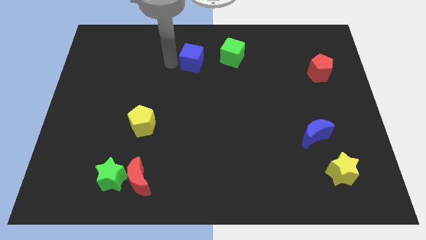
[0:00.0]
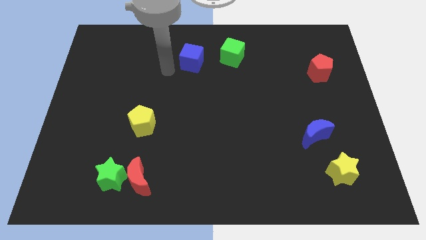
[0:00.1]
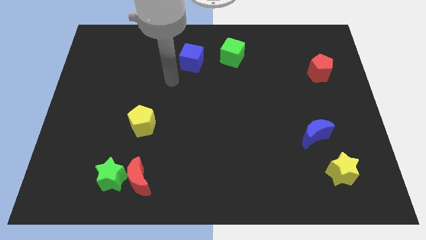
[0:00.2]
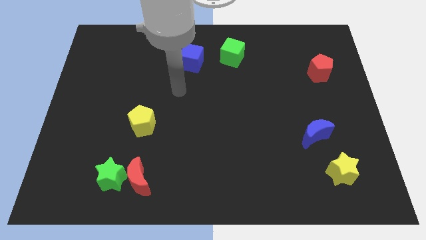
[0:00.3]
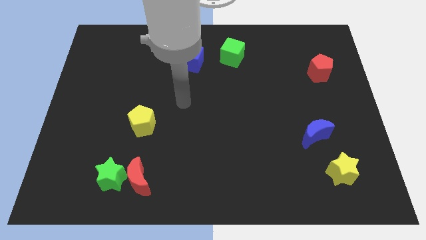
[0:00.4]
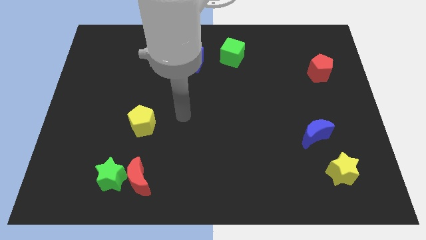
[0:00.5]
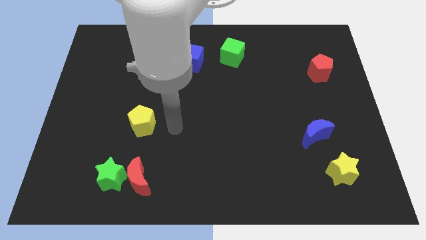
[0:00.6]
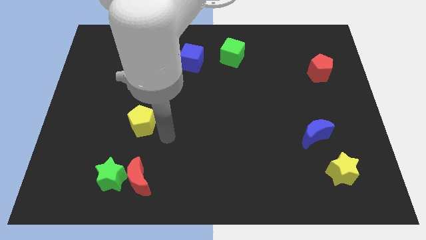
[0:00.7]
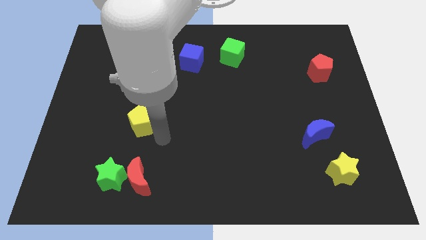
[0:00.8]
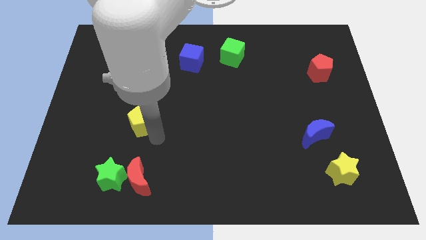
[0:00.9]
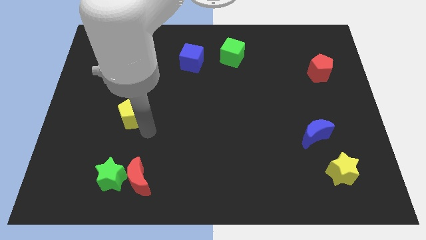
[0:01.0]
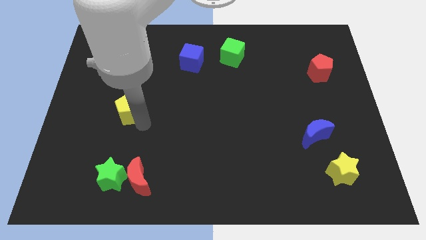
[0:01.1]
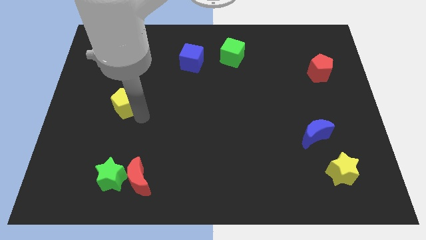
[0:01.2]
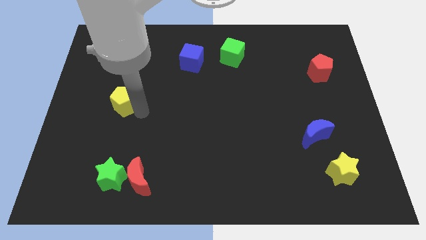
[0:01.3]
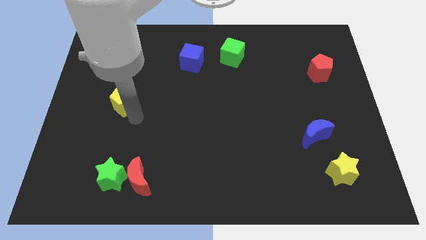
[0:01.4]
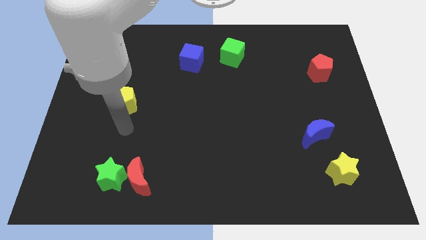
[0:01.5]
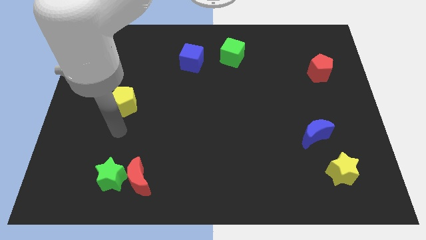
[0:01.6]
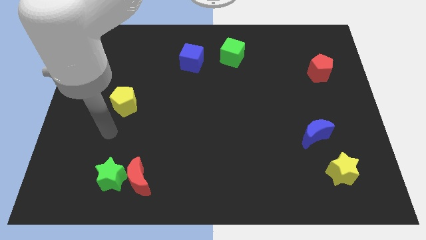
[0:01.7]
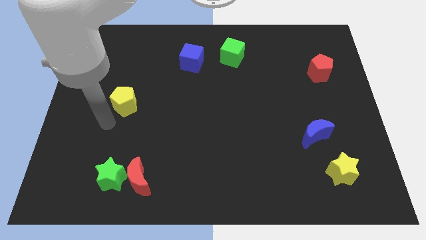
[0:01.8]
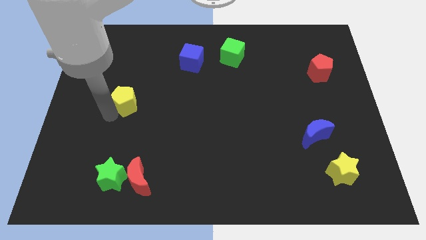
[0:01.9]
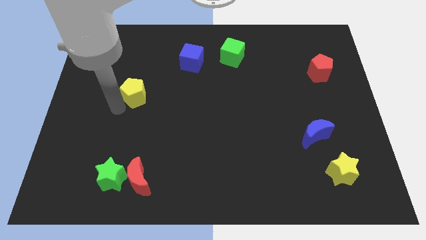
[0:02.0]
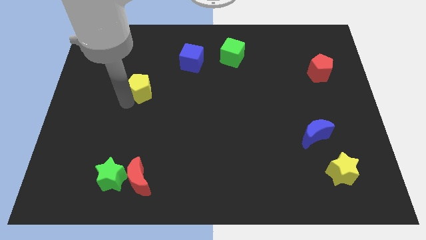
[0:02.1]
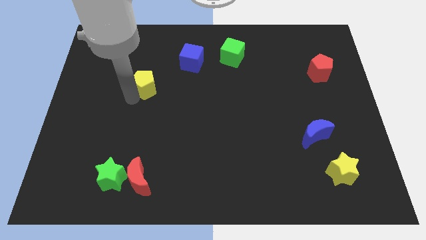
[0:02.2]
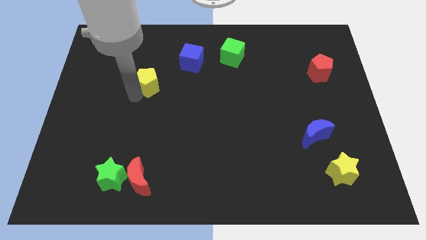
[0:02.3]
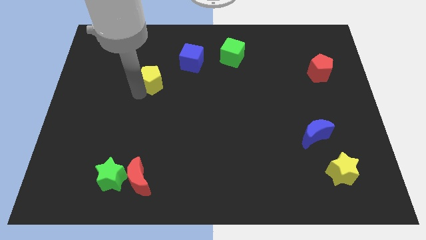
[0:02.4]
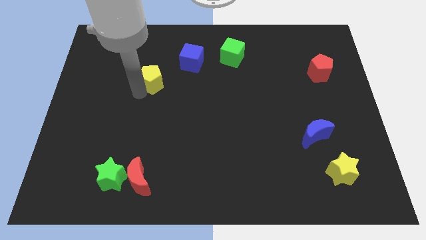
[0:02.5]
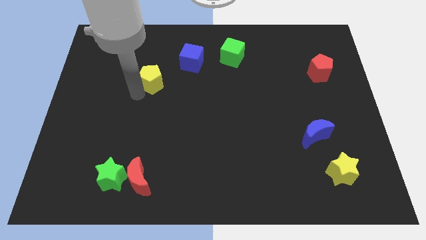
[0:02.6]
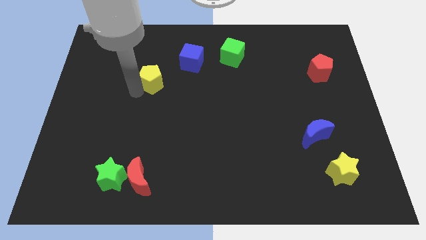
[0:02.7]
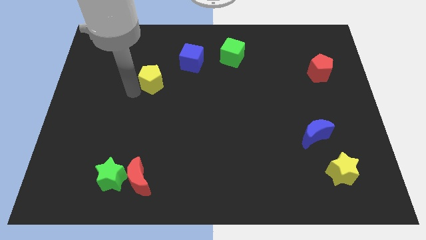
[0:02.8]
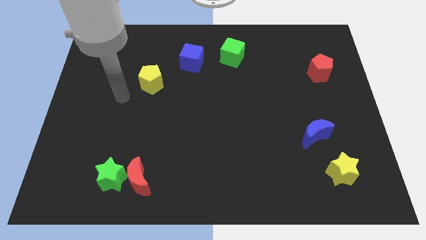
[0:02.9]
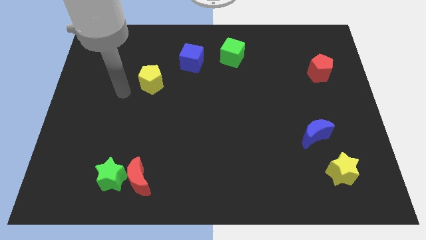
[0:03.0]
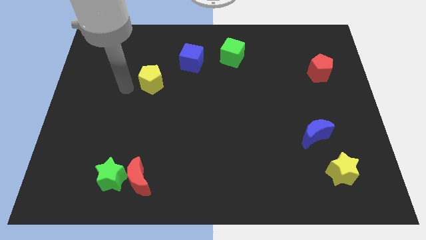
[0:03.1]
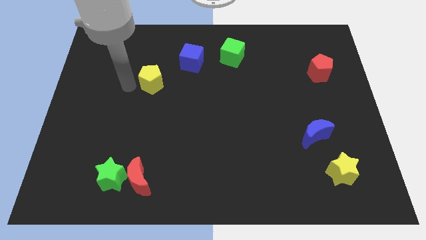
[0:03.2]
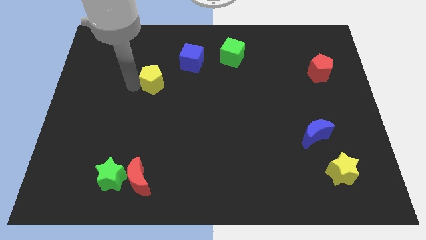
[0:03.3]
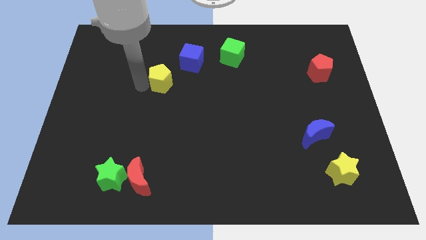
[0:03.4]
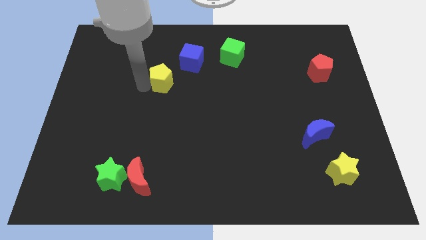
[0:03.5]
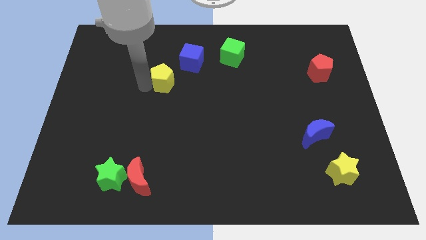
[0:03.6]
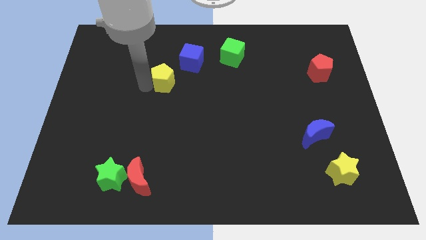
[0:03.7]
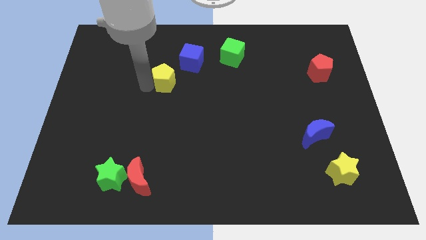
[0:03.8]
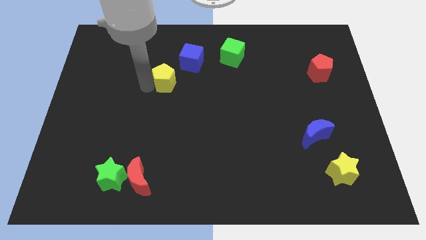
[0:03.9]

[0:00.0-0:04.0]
slide the yellow pentagon near to the bottom side of the blue cube

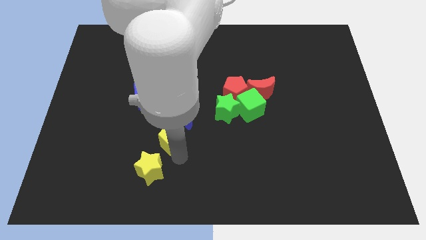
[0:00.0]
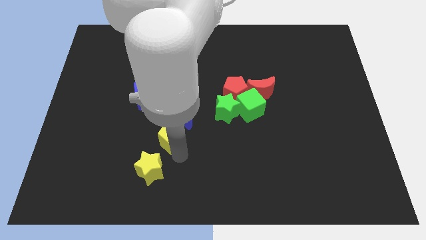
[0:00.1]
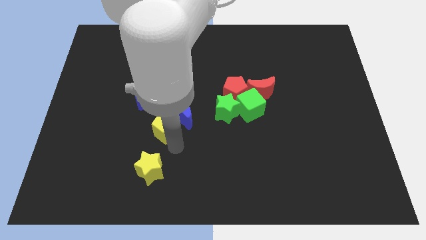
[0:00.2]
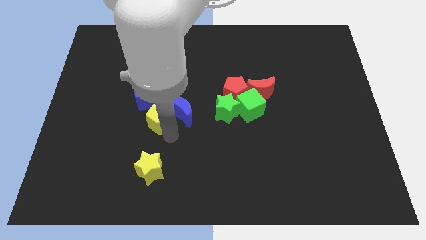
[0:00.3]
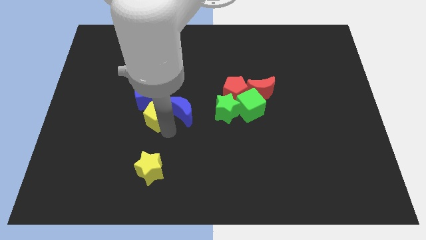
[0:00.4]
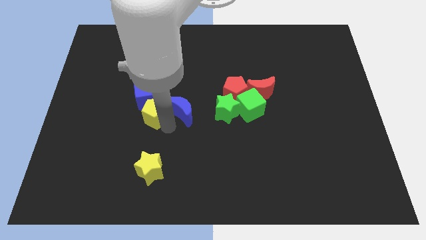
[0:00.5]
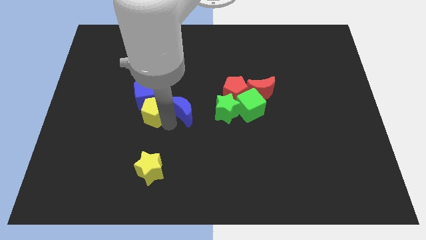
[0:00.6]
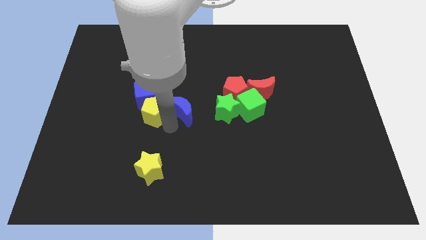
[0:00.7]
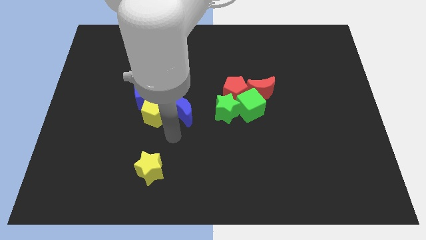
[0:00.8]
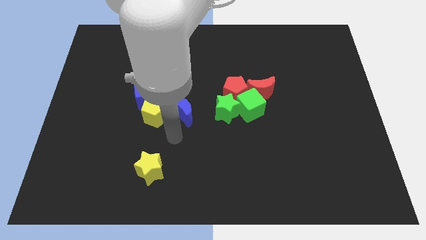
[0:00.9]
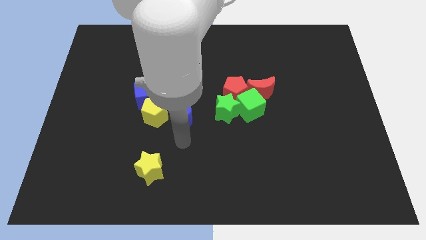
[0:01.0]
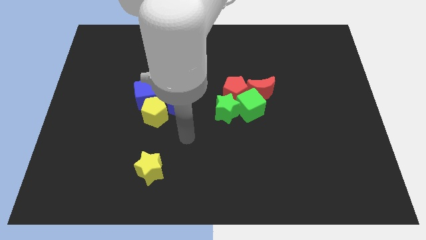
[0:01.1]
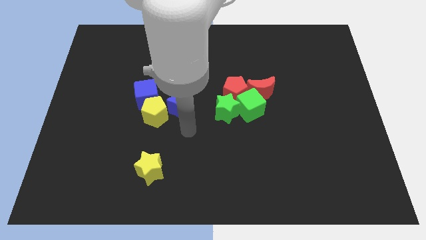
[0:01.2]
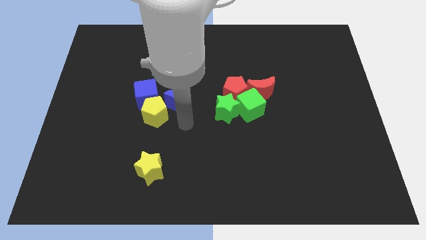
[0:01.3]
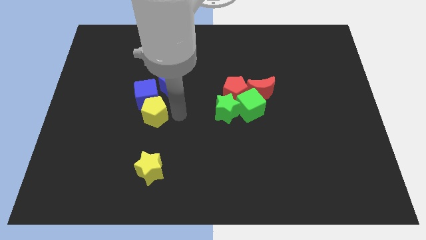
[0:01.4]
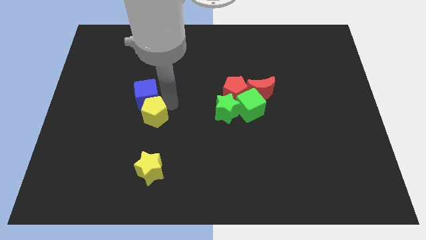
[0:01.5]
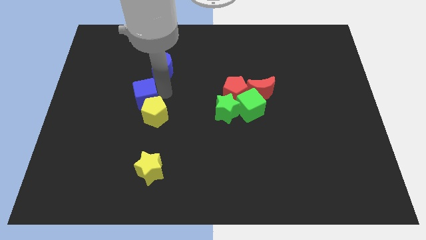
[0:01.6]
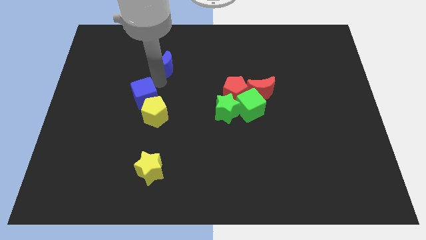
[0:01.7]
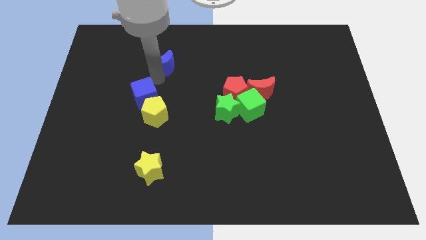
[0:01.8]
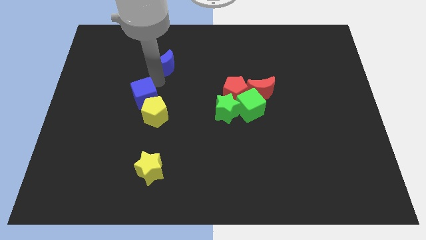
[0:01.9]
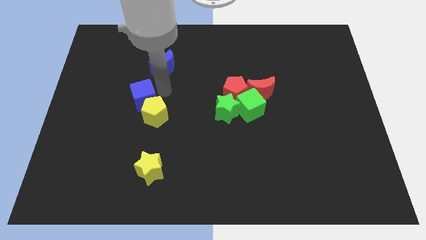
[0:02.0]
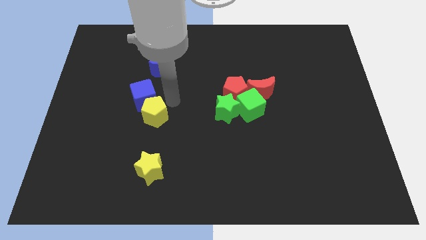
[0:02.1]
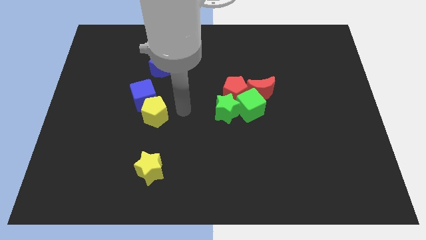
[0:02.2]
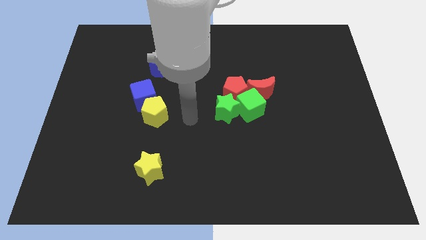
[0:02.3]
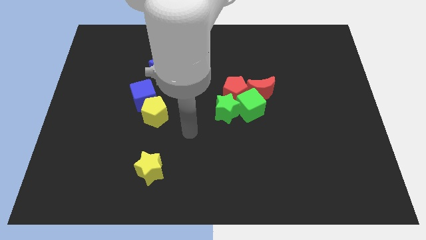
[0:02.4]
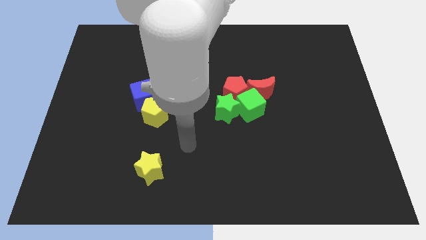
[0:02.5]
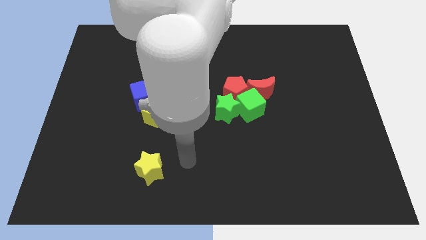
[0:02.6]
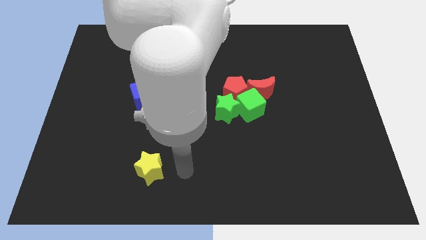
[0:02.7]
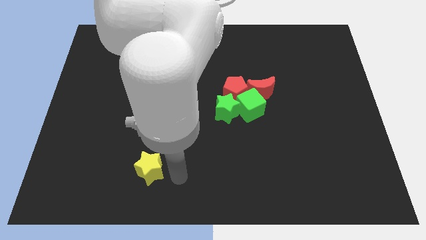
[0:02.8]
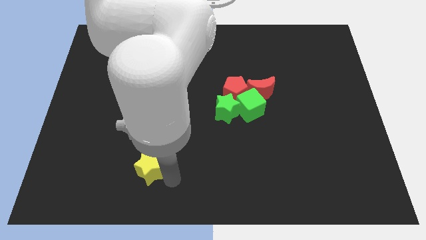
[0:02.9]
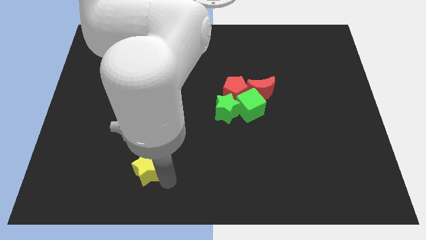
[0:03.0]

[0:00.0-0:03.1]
push the blue crescent towards top

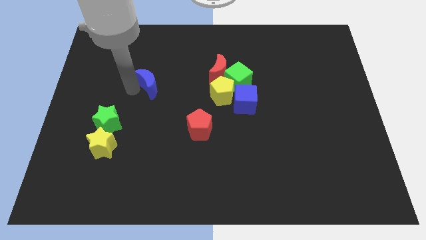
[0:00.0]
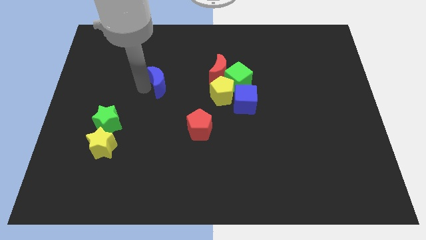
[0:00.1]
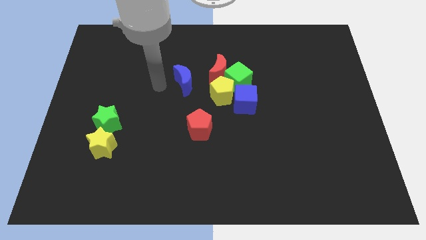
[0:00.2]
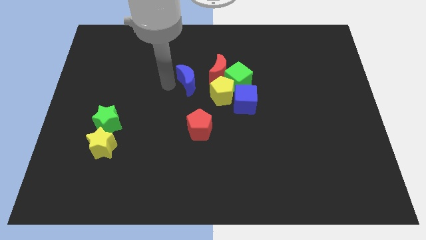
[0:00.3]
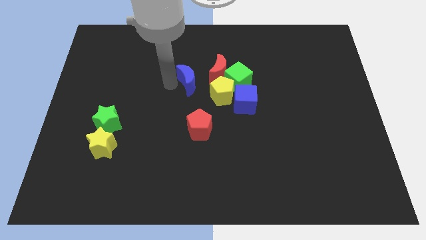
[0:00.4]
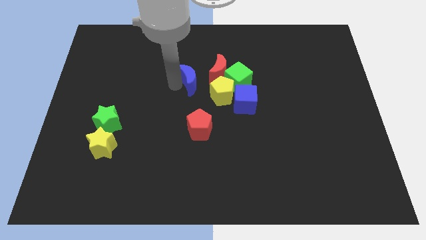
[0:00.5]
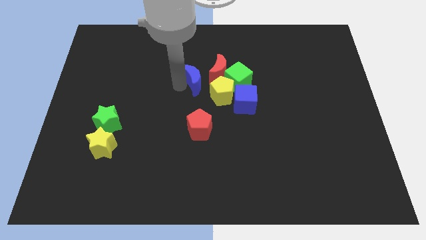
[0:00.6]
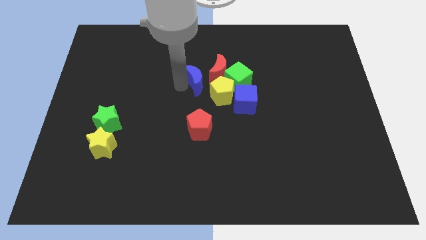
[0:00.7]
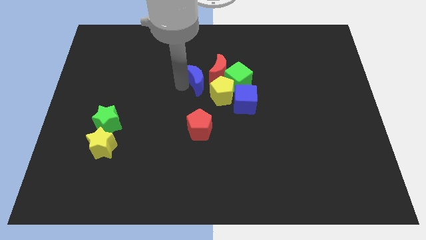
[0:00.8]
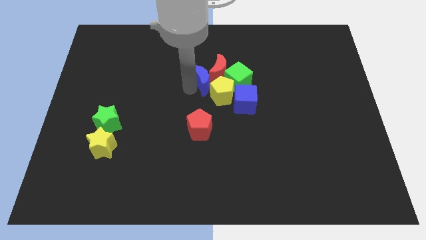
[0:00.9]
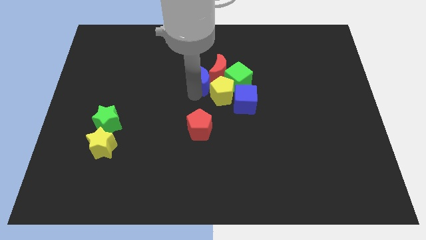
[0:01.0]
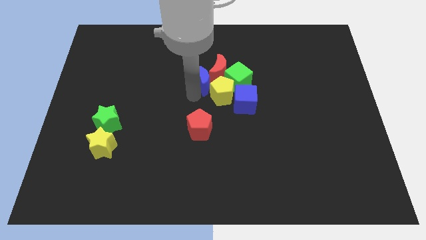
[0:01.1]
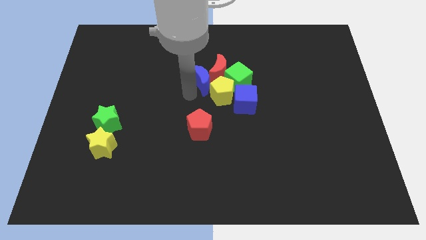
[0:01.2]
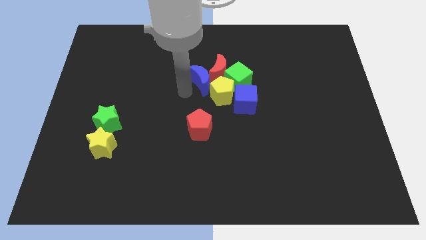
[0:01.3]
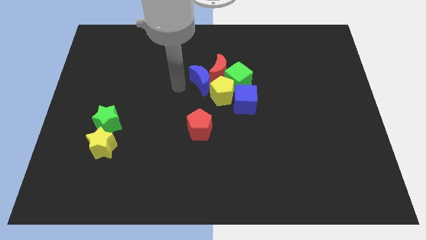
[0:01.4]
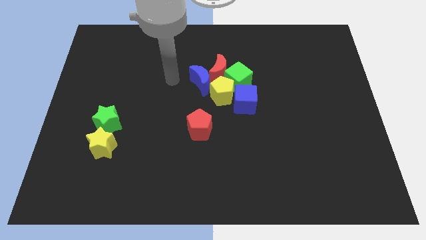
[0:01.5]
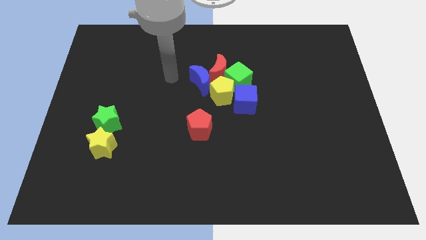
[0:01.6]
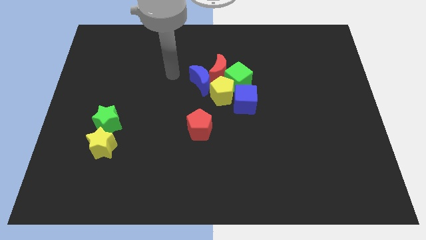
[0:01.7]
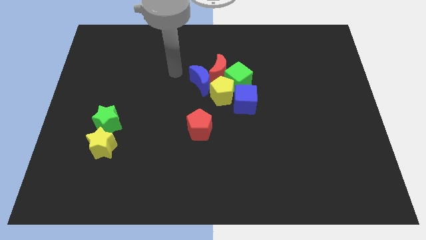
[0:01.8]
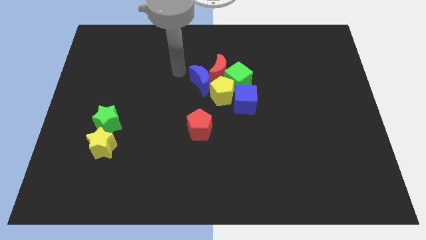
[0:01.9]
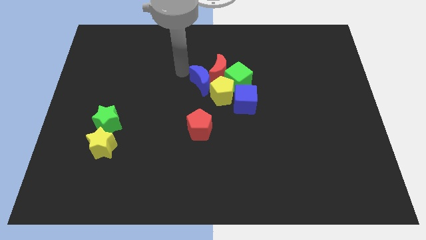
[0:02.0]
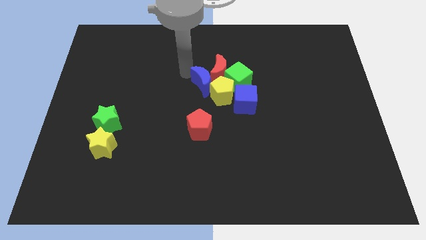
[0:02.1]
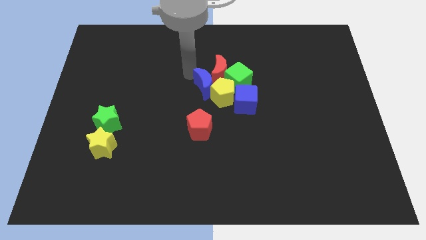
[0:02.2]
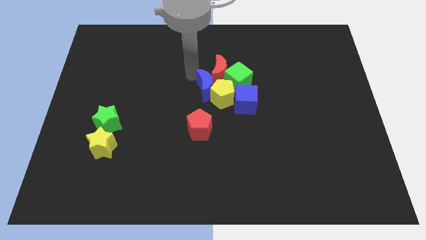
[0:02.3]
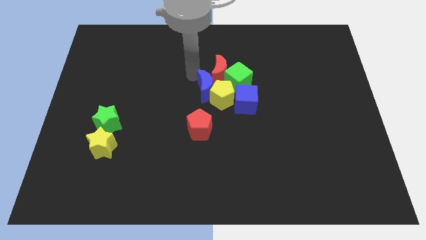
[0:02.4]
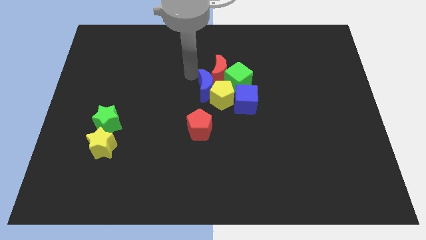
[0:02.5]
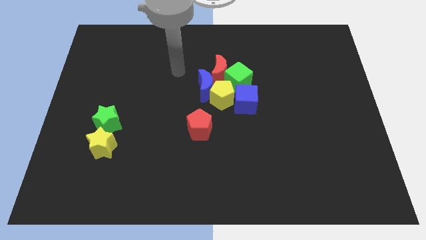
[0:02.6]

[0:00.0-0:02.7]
push the blue moon into red moon
